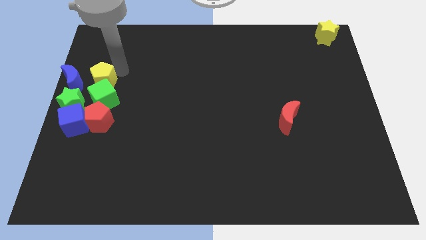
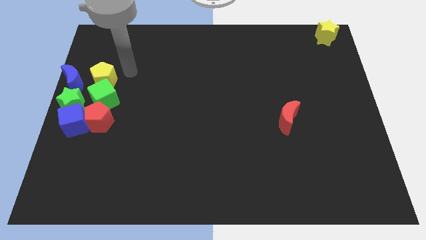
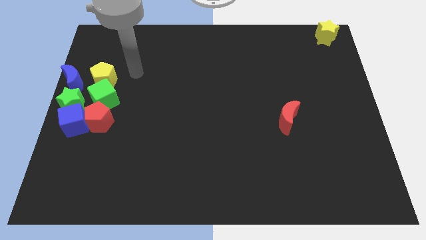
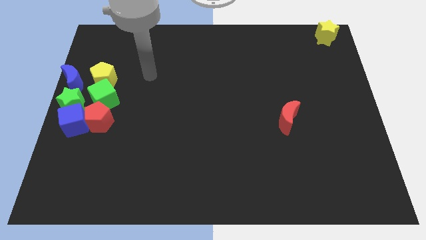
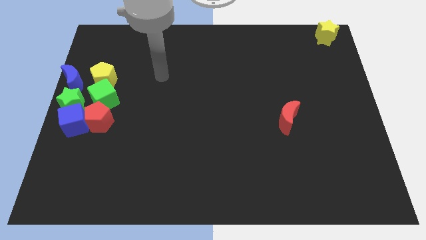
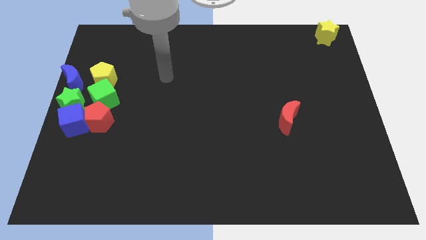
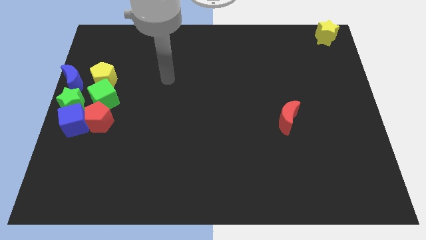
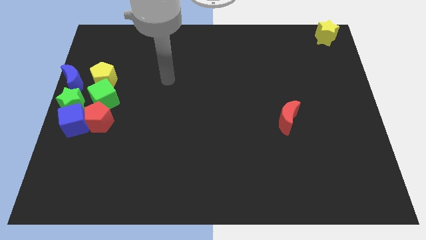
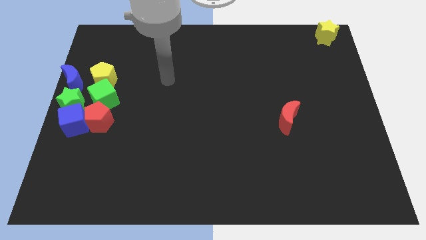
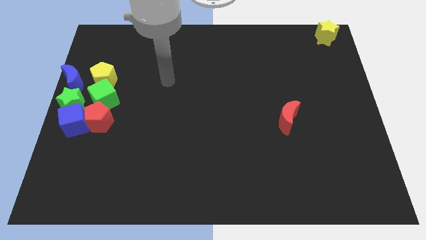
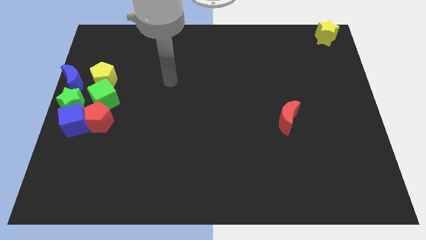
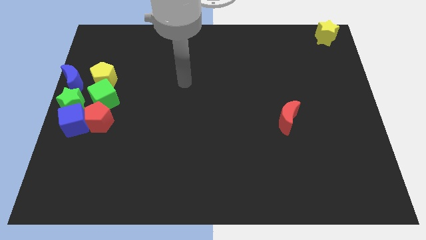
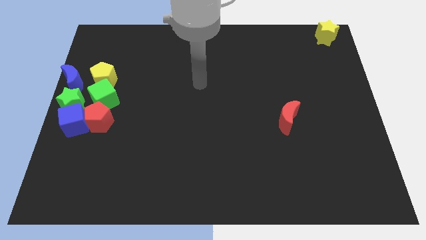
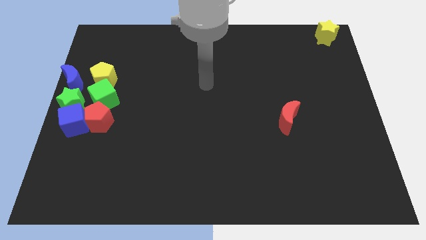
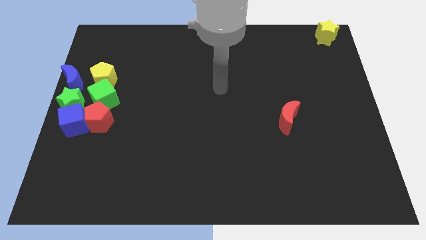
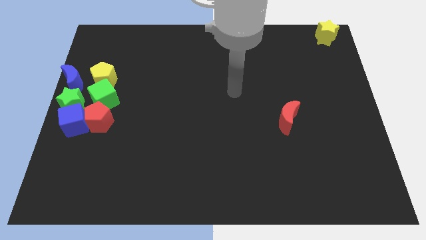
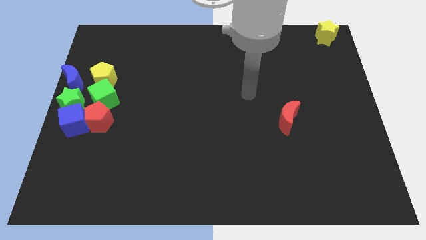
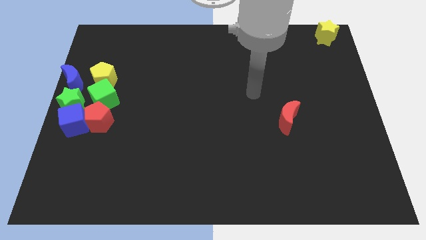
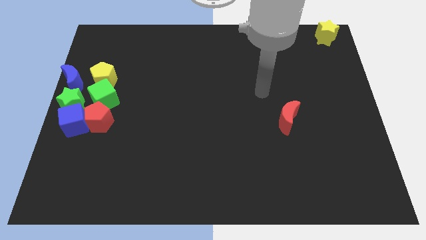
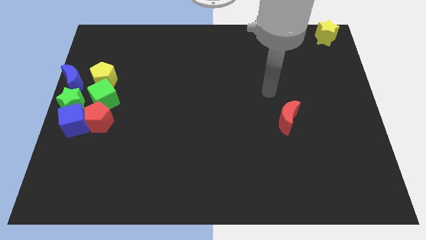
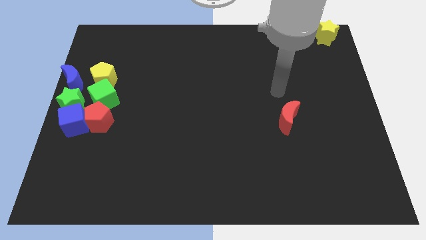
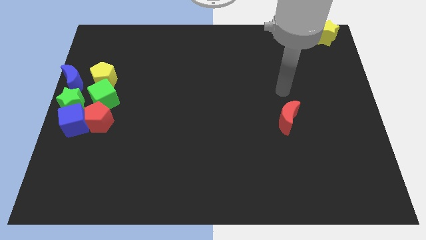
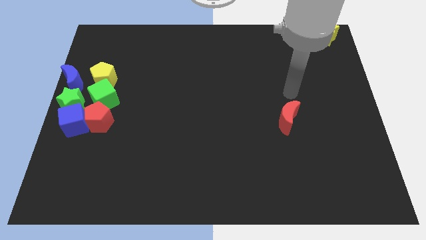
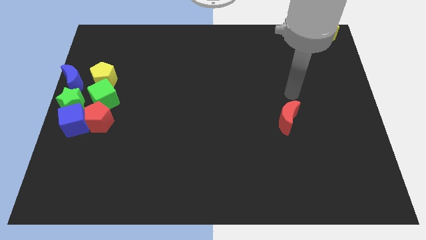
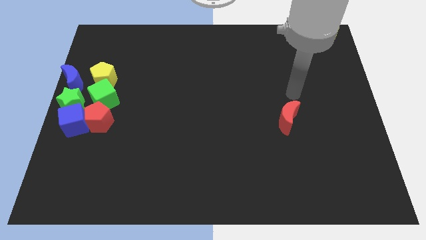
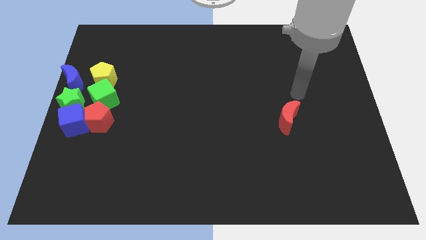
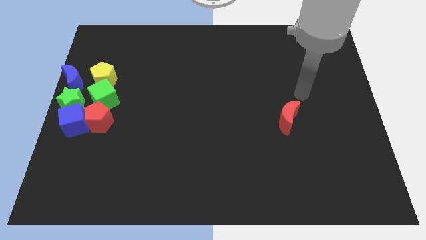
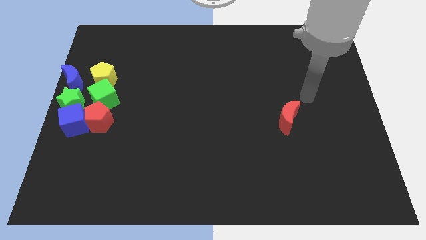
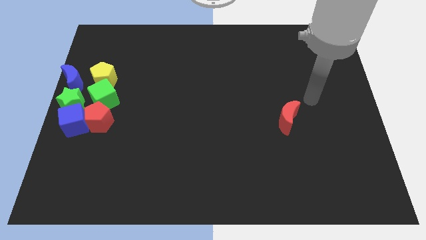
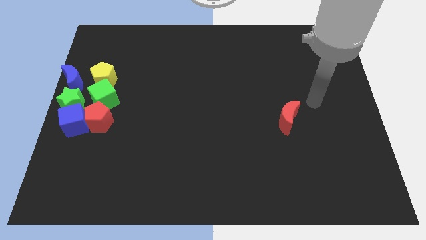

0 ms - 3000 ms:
move your arm towards red moon

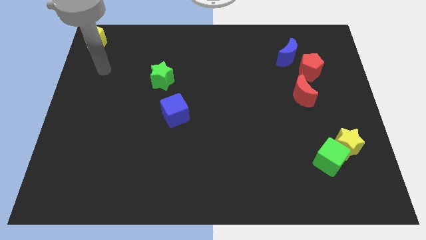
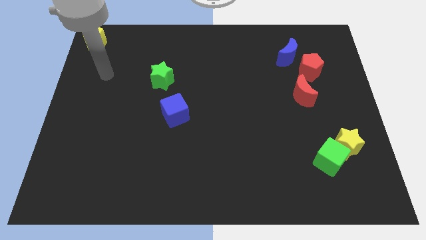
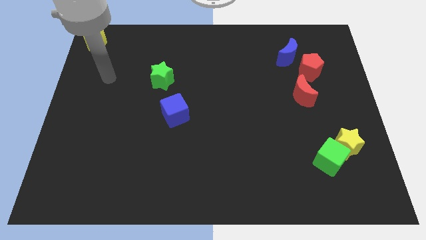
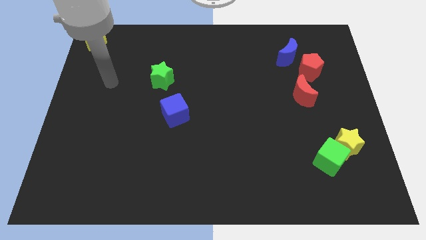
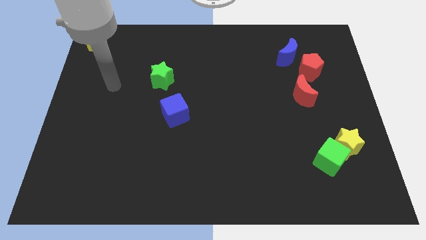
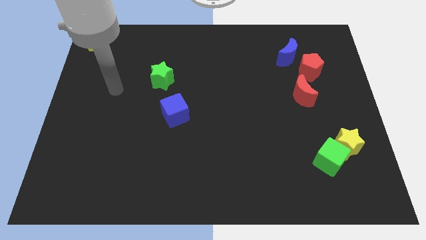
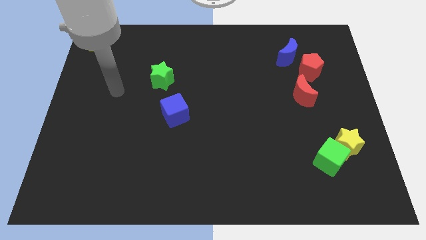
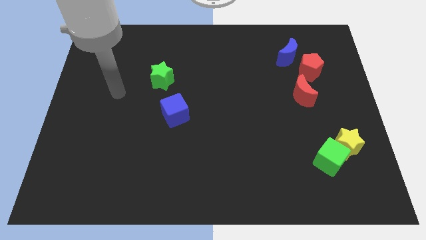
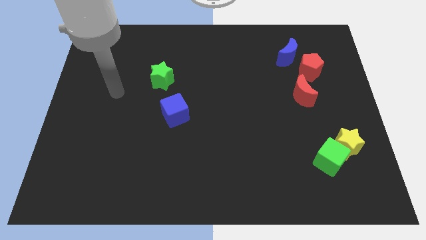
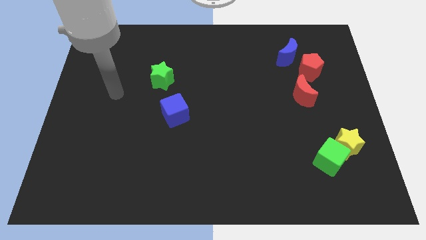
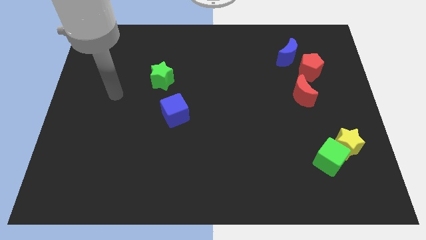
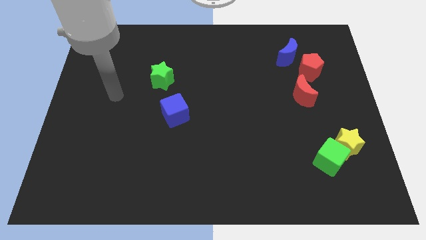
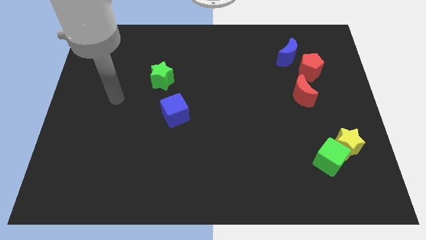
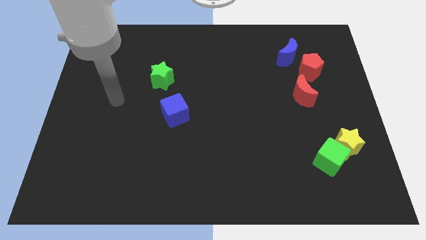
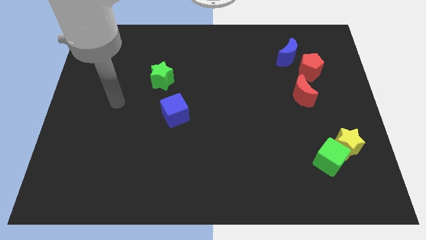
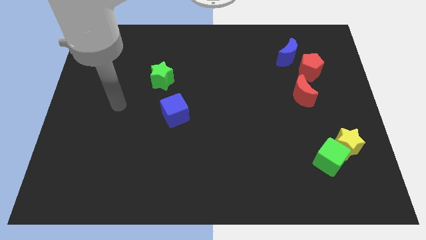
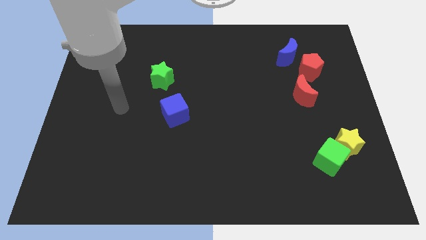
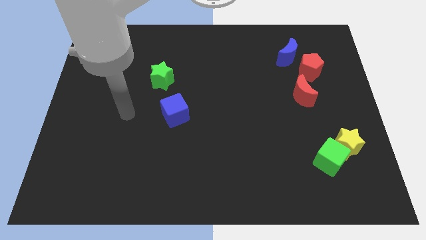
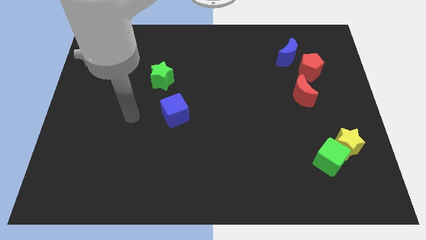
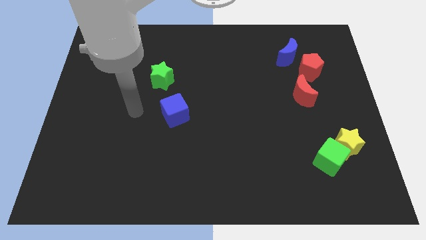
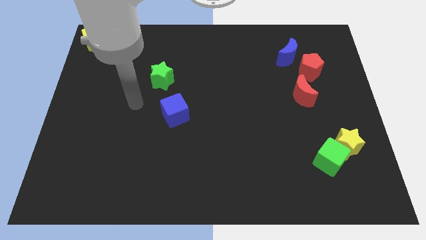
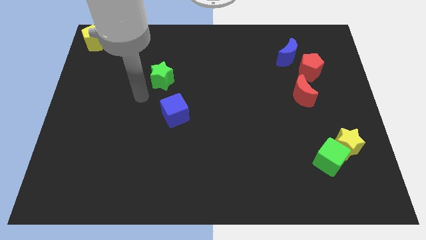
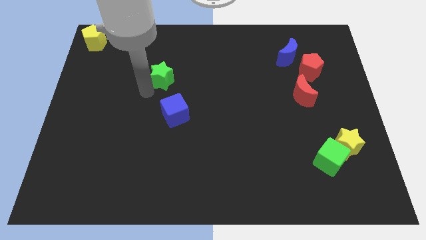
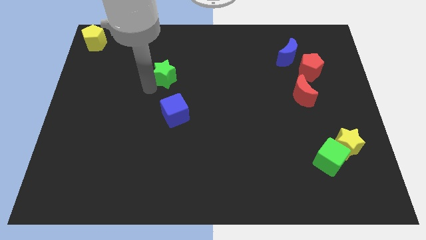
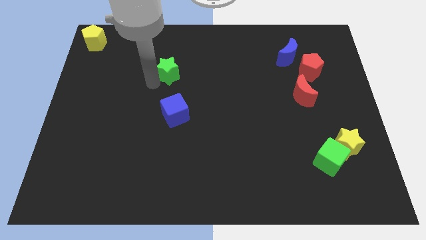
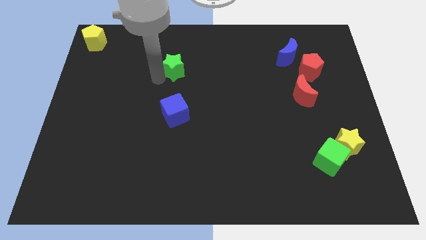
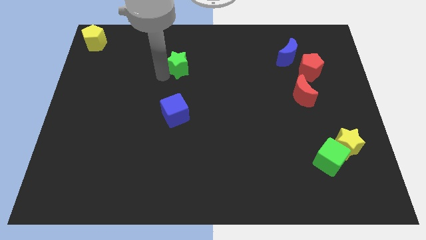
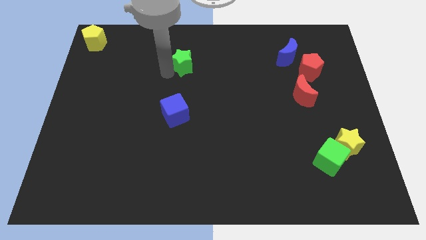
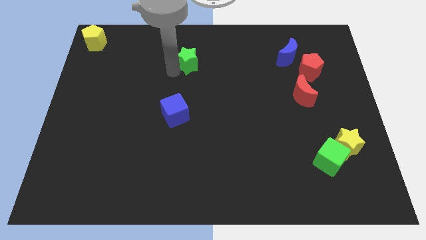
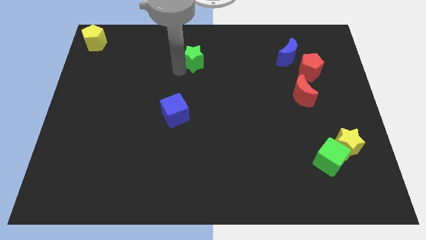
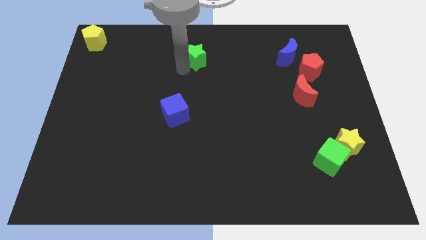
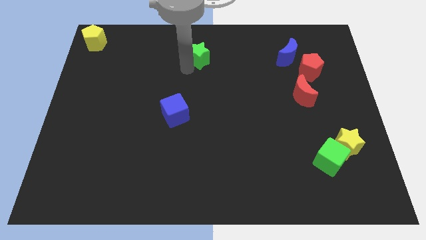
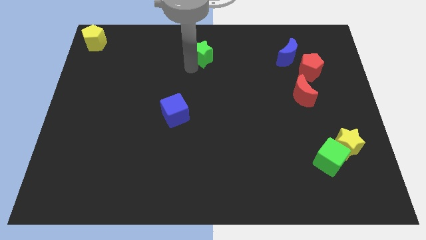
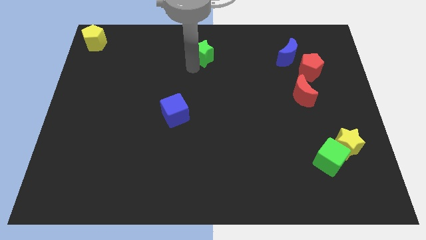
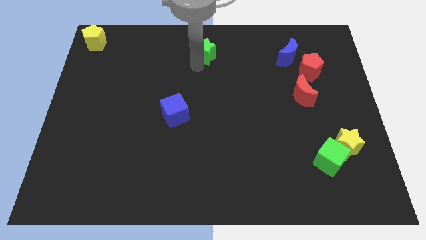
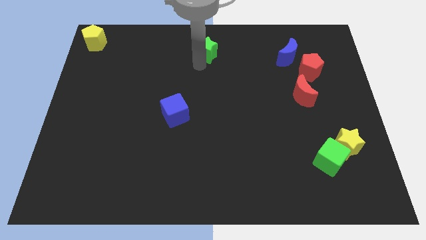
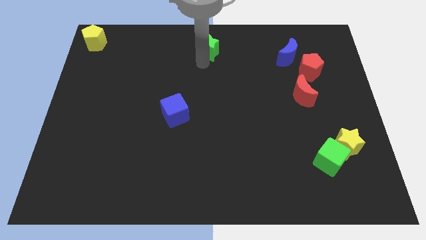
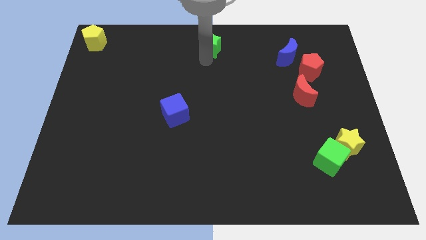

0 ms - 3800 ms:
move the green star to the top center of the board

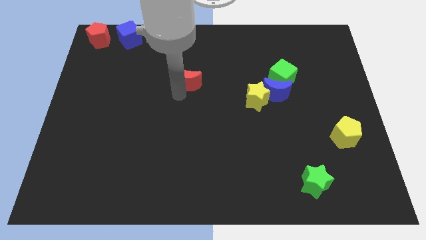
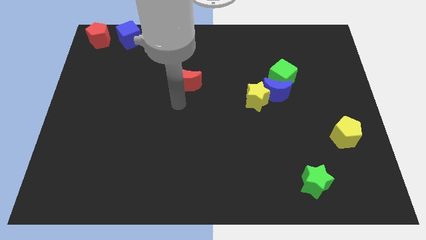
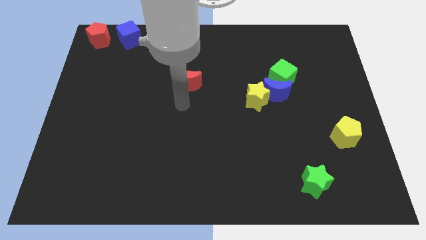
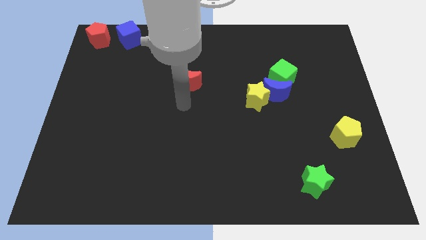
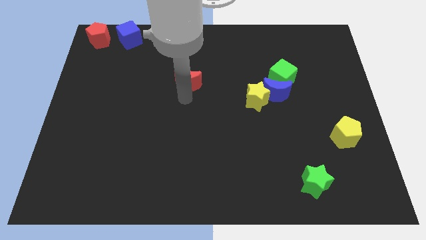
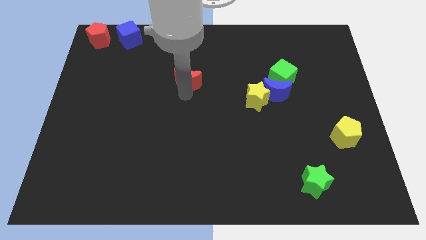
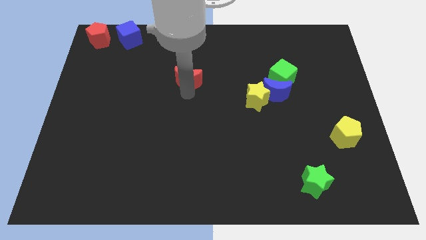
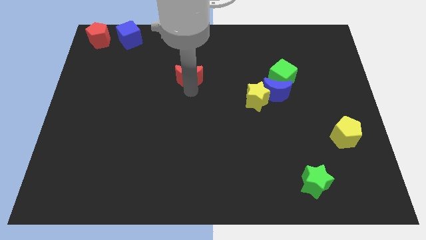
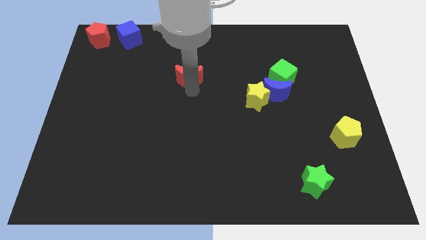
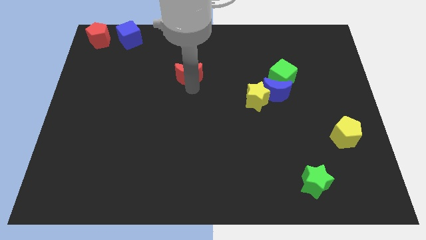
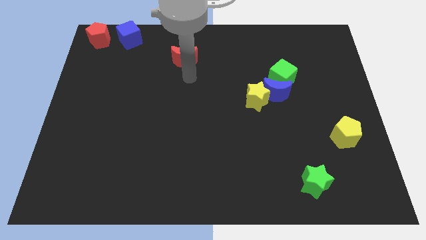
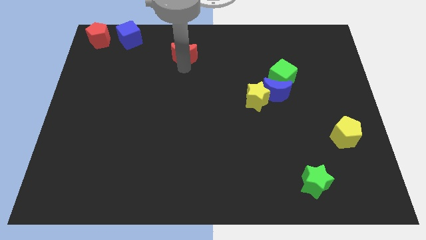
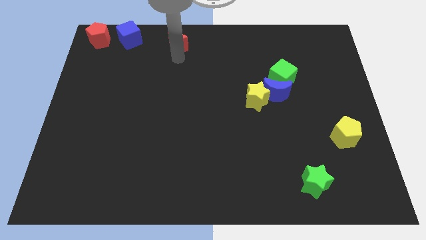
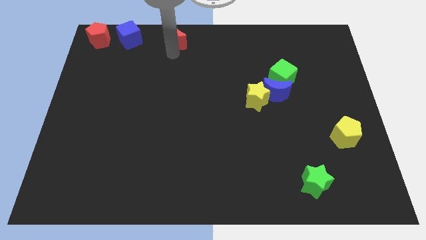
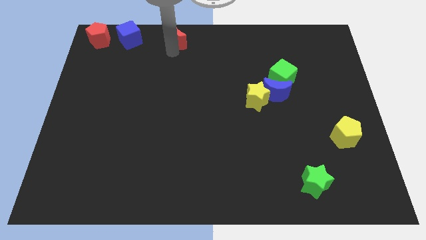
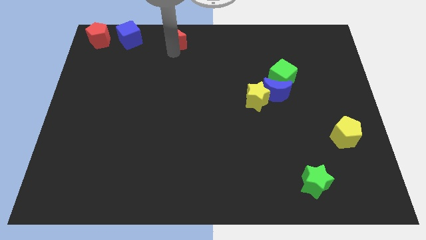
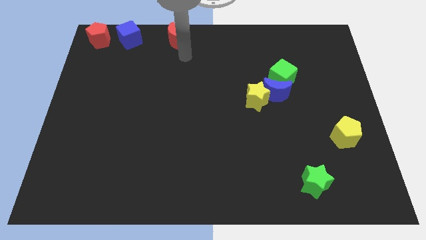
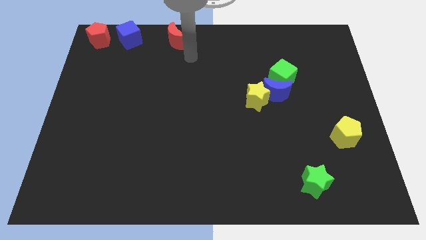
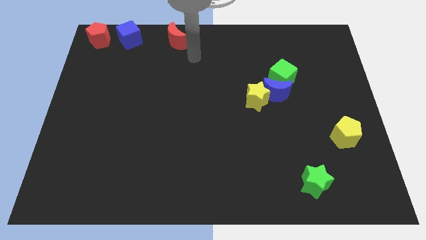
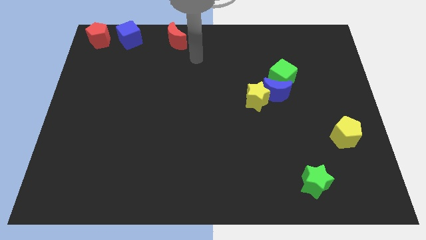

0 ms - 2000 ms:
place the red crescent at top of the board
